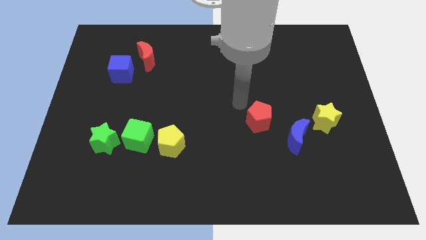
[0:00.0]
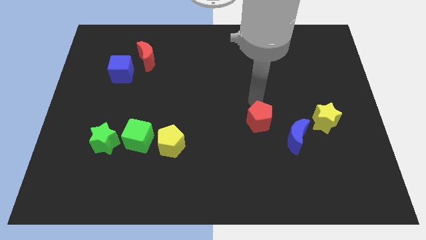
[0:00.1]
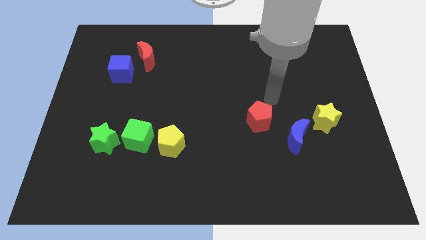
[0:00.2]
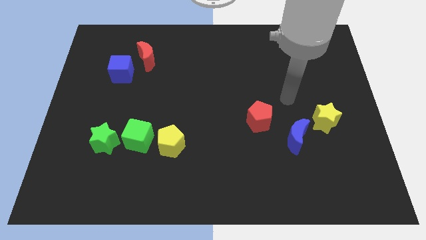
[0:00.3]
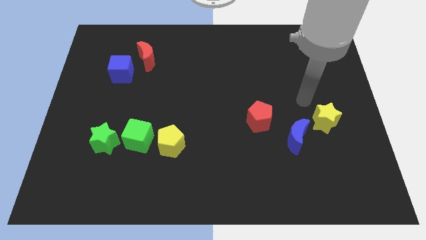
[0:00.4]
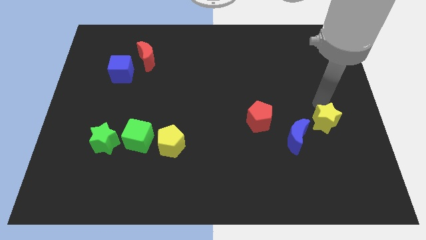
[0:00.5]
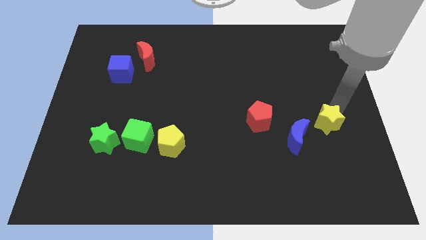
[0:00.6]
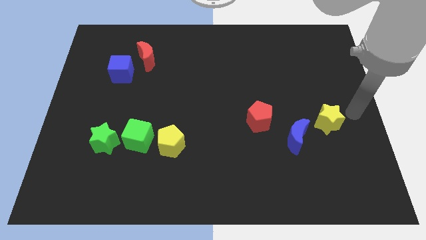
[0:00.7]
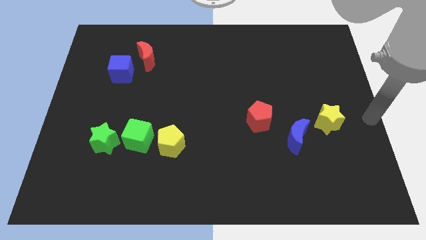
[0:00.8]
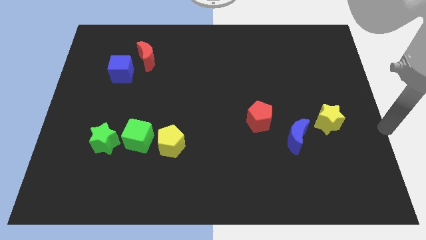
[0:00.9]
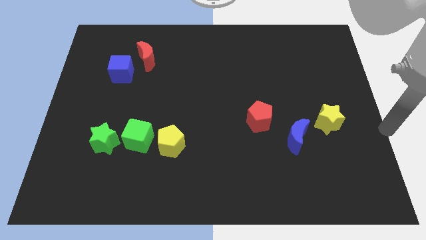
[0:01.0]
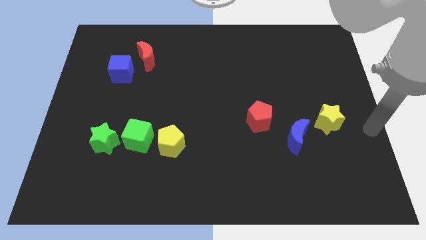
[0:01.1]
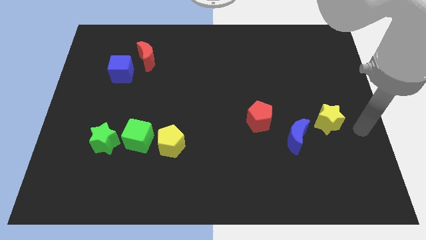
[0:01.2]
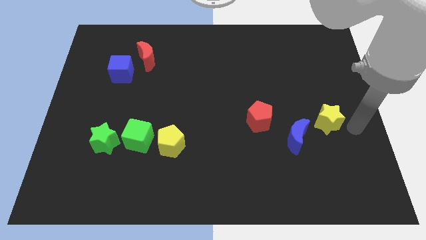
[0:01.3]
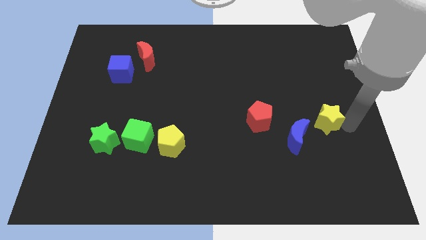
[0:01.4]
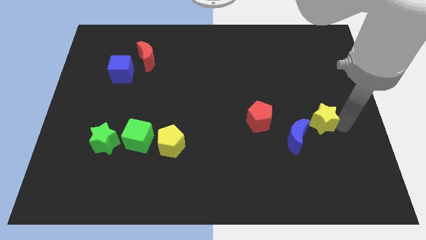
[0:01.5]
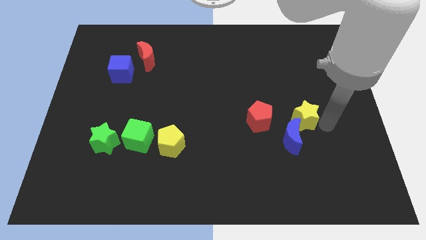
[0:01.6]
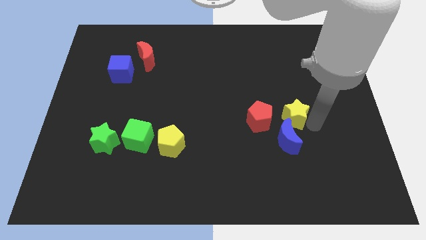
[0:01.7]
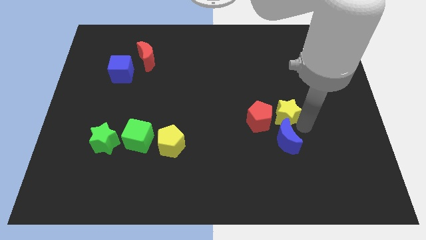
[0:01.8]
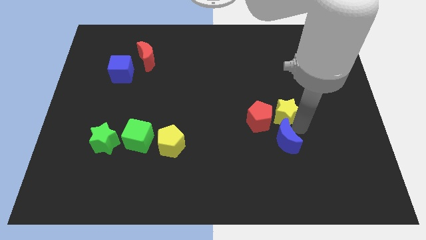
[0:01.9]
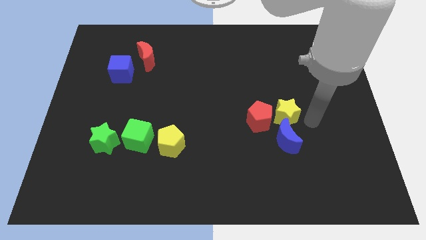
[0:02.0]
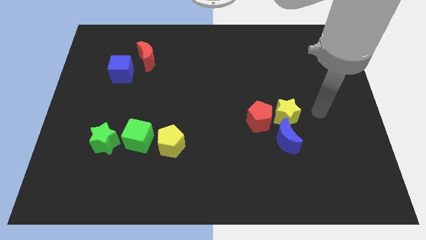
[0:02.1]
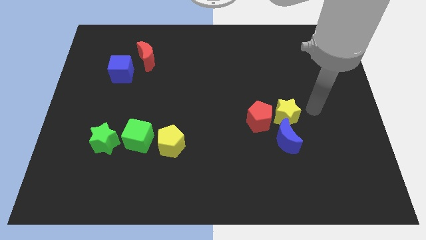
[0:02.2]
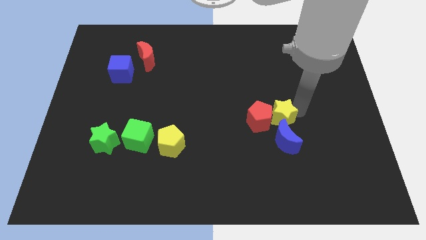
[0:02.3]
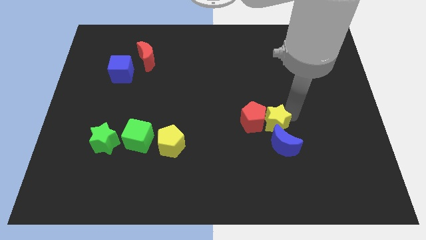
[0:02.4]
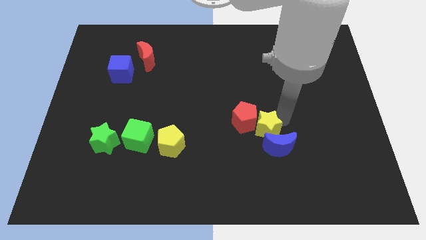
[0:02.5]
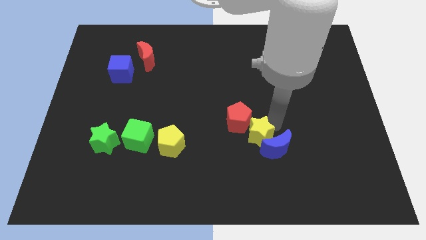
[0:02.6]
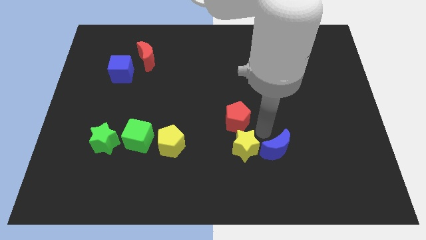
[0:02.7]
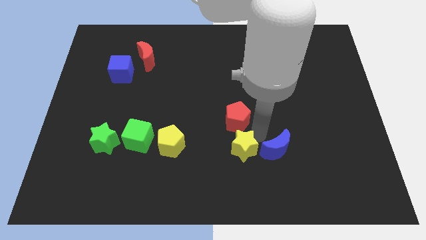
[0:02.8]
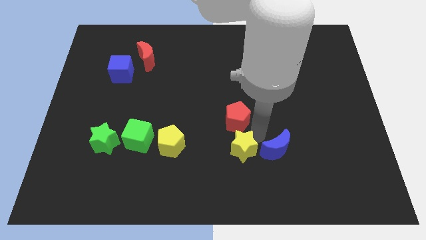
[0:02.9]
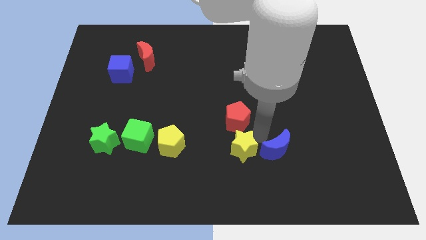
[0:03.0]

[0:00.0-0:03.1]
place the yellow star below the red pentagon

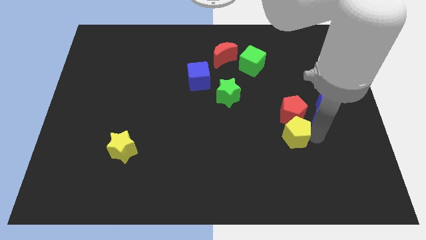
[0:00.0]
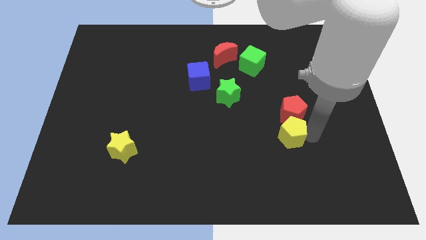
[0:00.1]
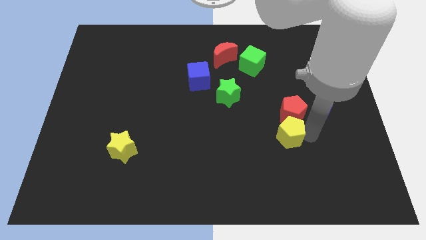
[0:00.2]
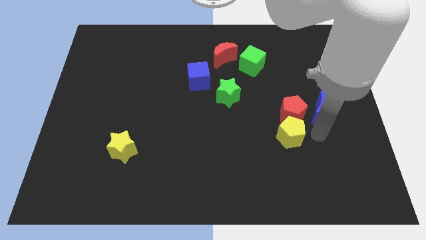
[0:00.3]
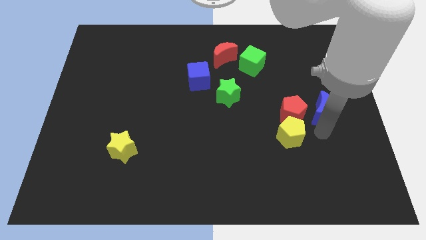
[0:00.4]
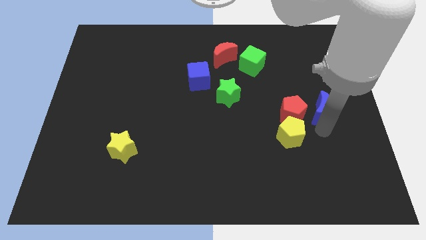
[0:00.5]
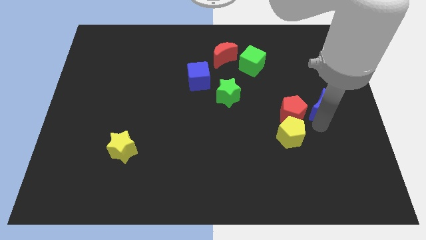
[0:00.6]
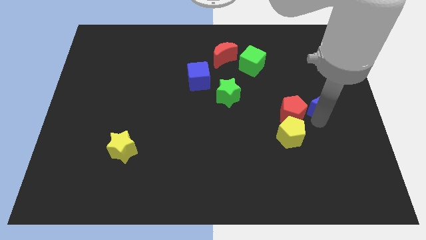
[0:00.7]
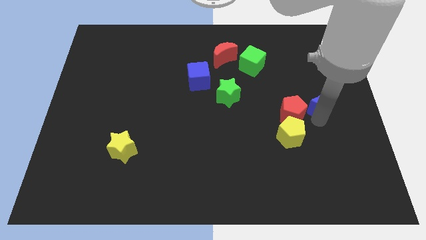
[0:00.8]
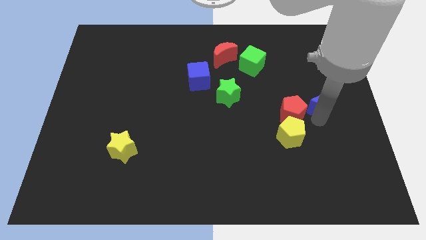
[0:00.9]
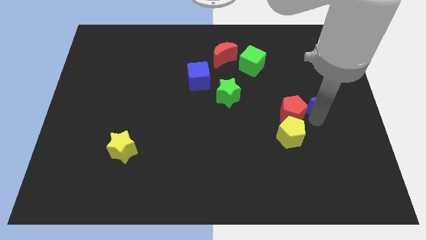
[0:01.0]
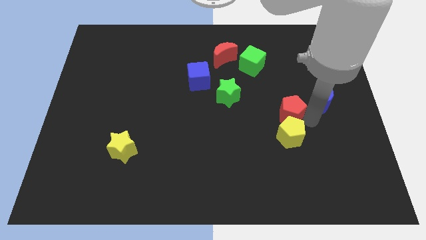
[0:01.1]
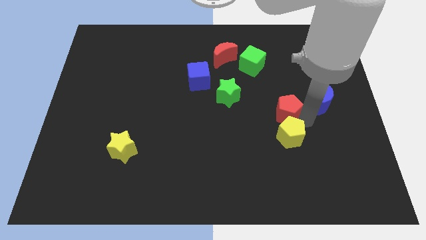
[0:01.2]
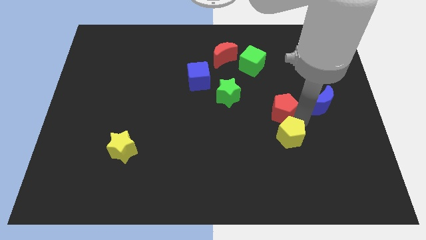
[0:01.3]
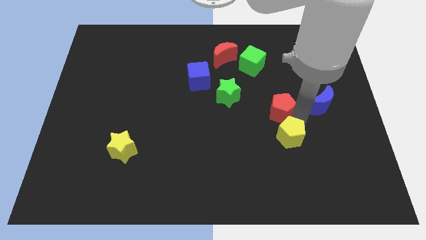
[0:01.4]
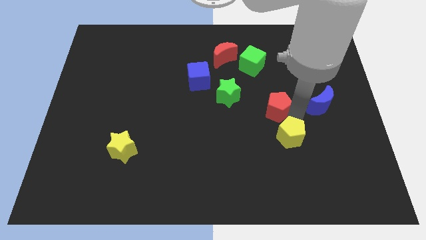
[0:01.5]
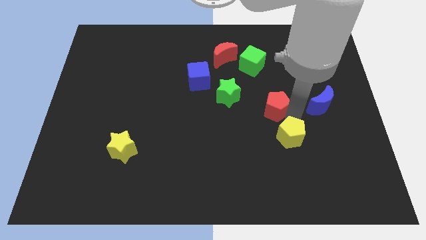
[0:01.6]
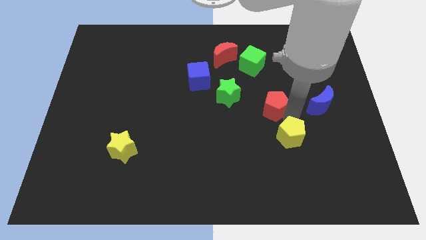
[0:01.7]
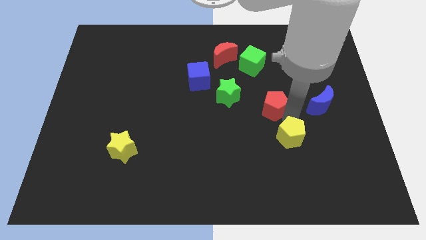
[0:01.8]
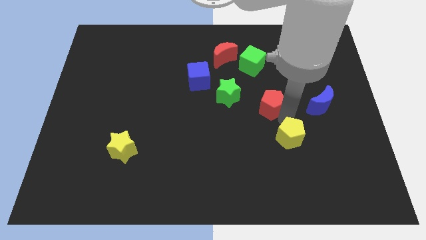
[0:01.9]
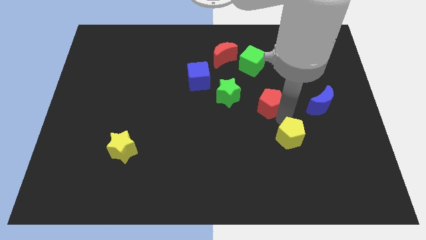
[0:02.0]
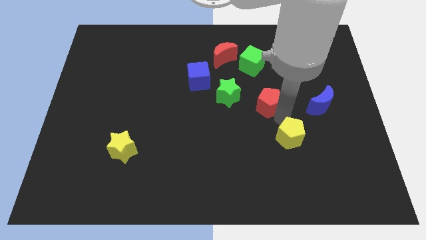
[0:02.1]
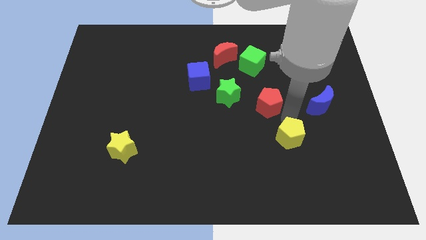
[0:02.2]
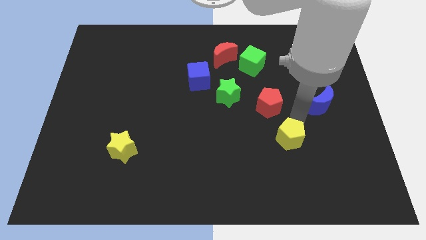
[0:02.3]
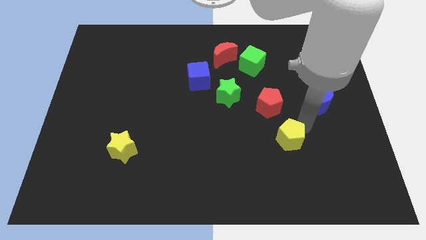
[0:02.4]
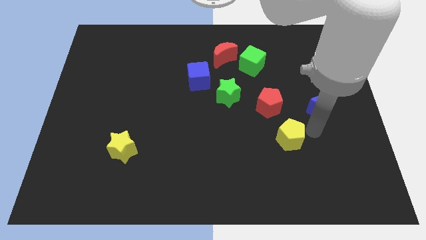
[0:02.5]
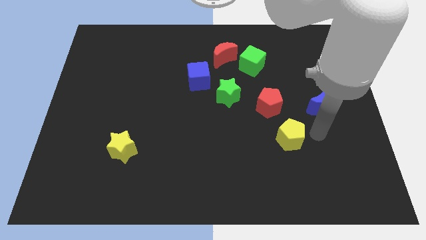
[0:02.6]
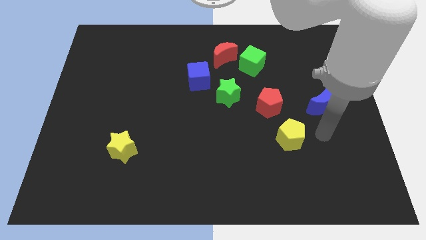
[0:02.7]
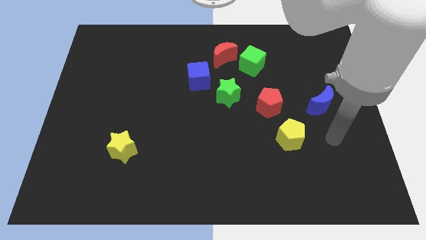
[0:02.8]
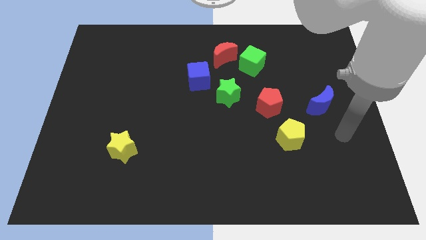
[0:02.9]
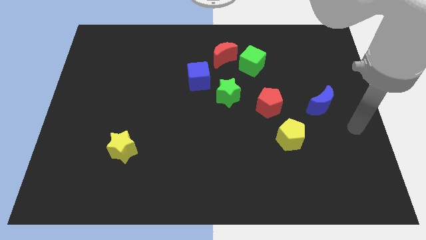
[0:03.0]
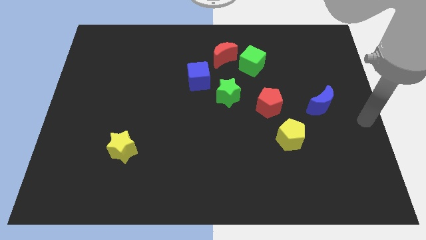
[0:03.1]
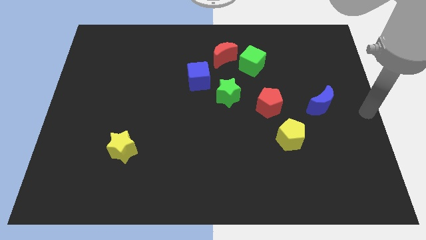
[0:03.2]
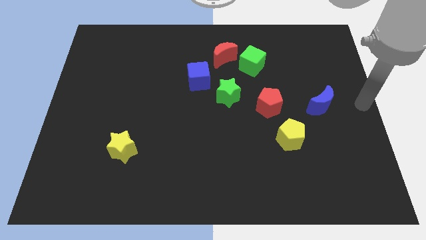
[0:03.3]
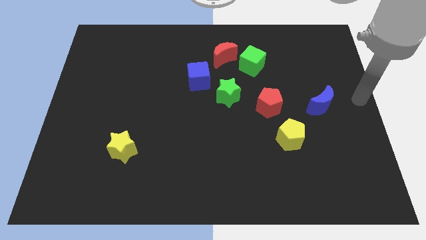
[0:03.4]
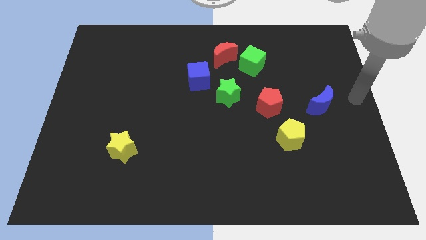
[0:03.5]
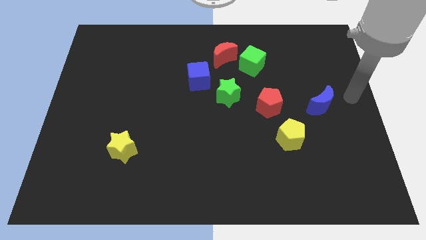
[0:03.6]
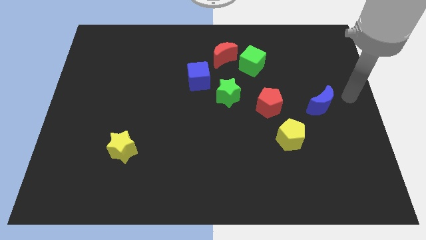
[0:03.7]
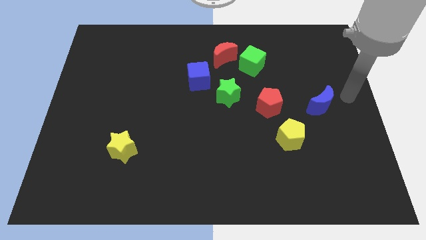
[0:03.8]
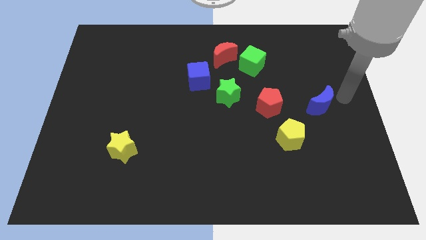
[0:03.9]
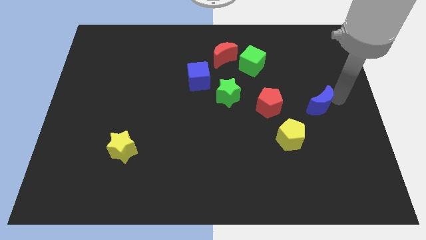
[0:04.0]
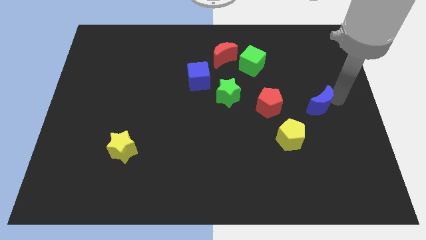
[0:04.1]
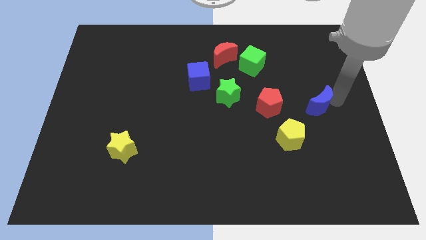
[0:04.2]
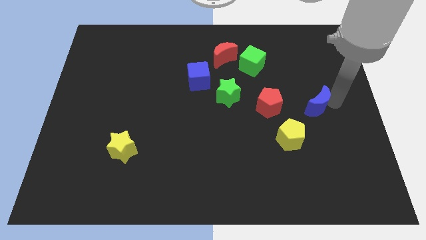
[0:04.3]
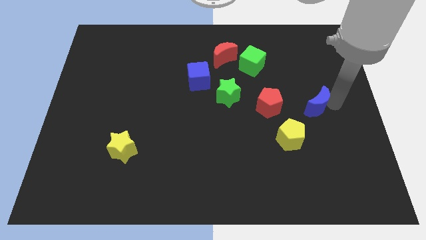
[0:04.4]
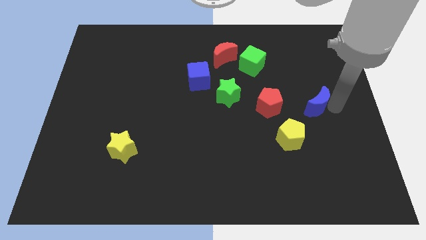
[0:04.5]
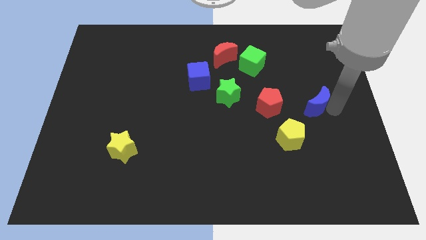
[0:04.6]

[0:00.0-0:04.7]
separate the red pentagon from yellow pentagon

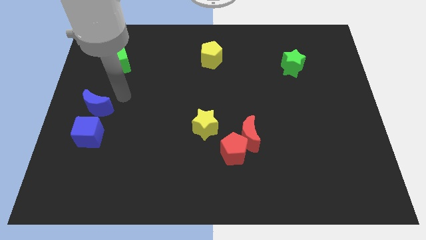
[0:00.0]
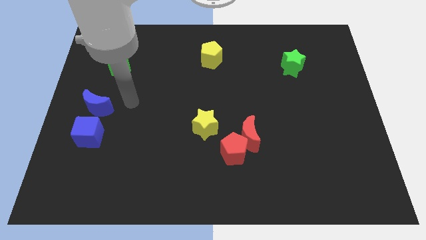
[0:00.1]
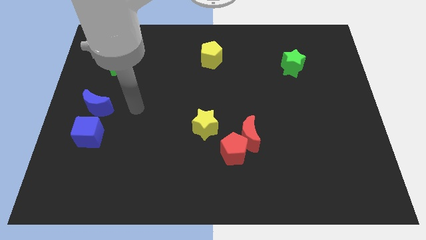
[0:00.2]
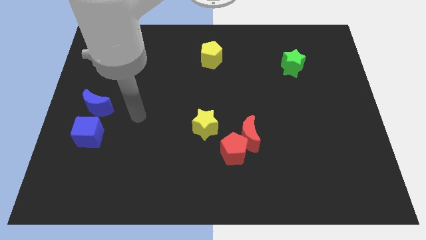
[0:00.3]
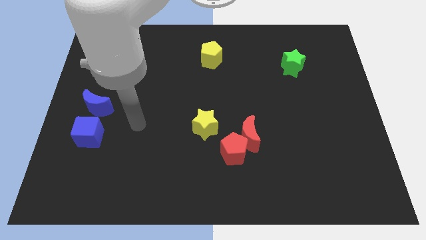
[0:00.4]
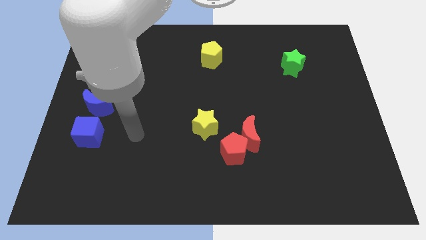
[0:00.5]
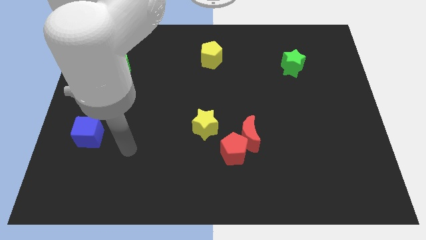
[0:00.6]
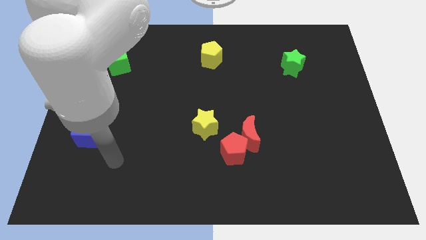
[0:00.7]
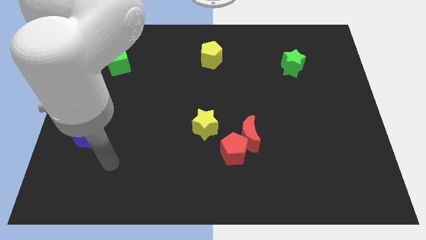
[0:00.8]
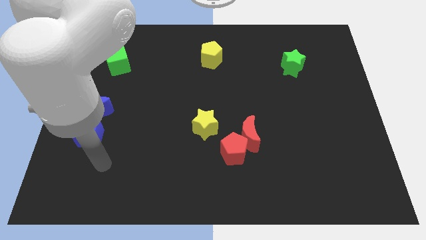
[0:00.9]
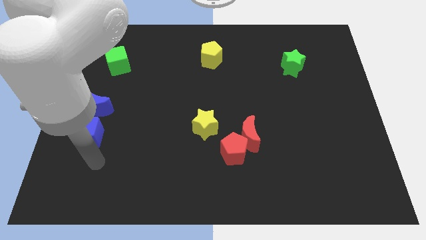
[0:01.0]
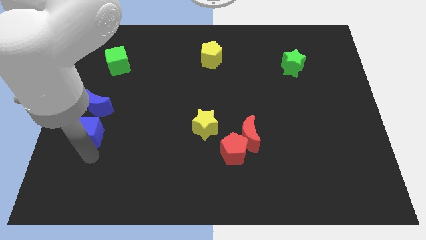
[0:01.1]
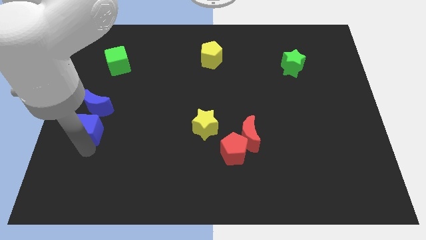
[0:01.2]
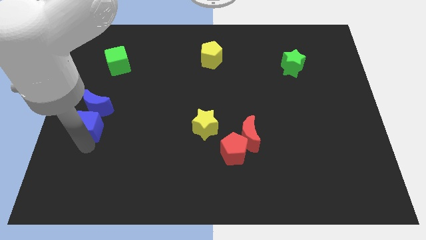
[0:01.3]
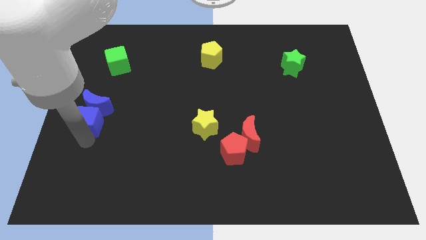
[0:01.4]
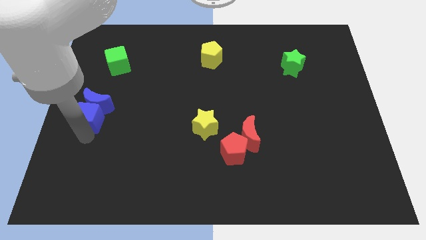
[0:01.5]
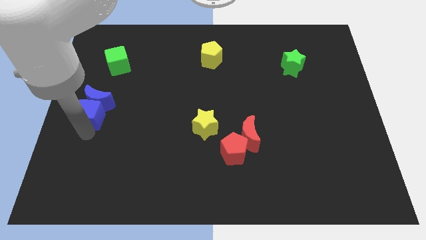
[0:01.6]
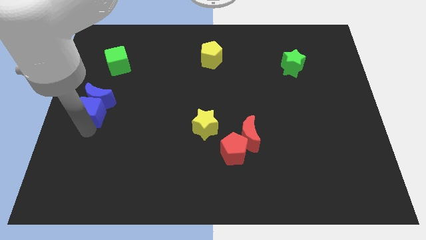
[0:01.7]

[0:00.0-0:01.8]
push the blue cube into the blue crescent
